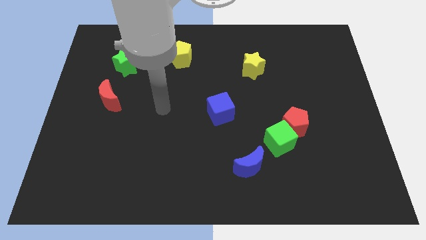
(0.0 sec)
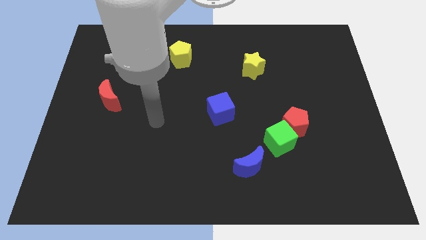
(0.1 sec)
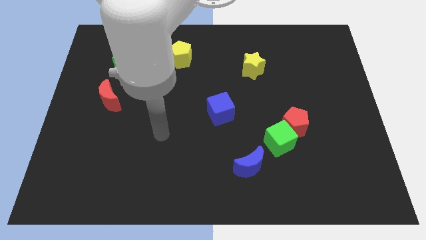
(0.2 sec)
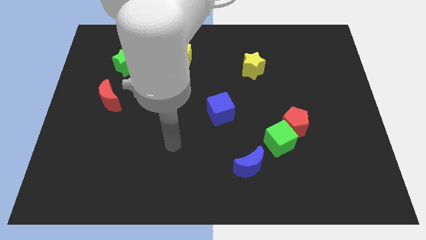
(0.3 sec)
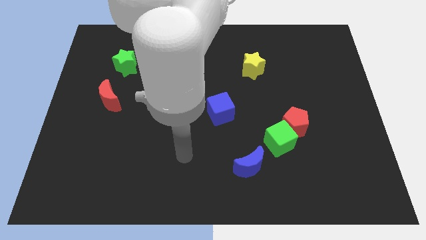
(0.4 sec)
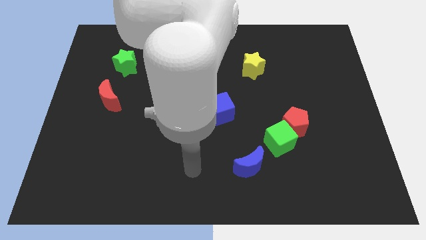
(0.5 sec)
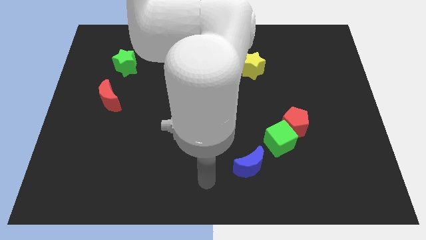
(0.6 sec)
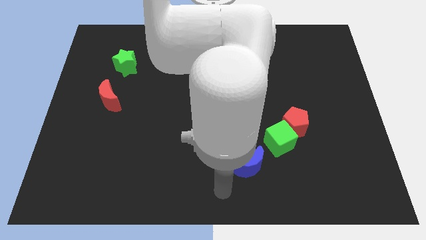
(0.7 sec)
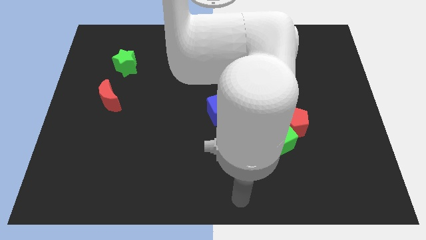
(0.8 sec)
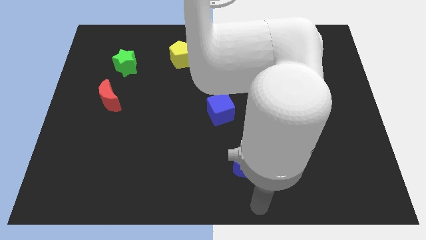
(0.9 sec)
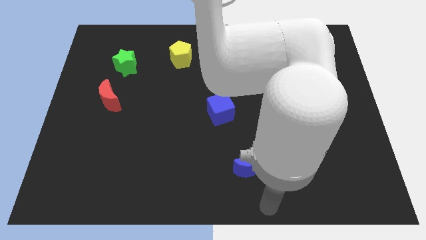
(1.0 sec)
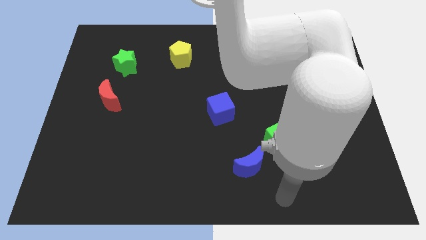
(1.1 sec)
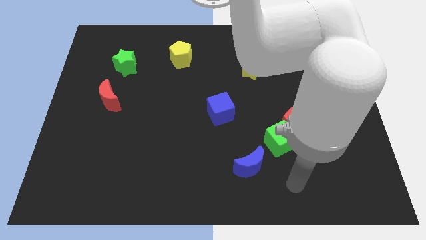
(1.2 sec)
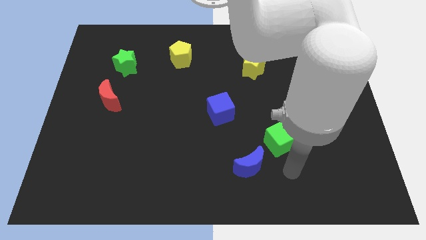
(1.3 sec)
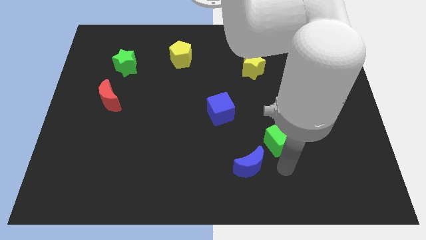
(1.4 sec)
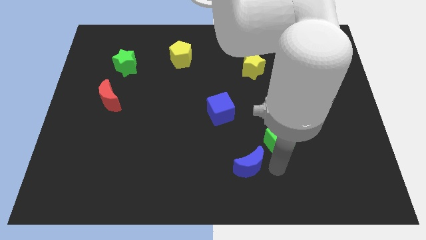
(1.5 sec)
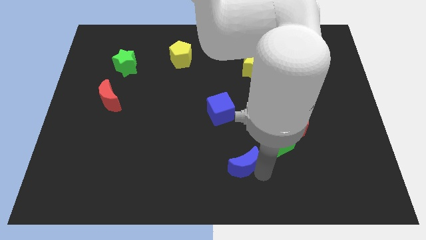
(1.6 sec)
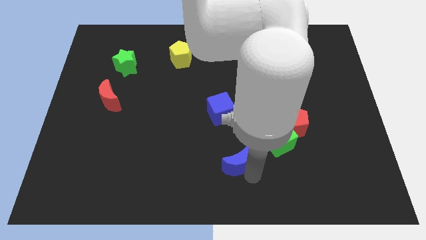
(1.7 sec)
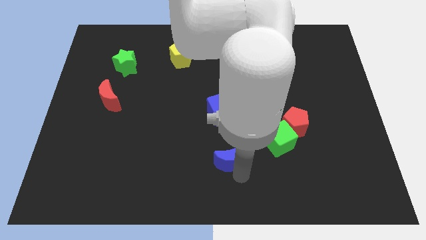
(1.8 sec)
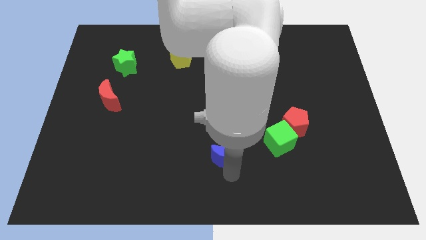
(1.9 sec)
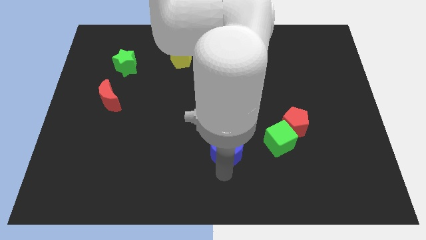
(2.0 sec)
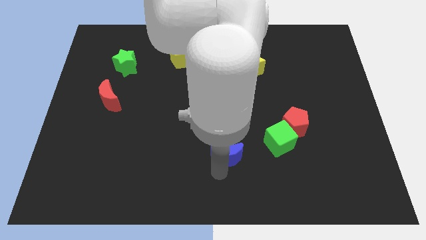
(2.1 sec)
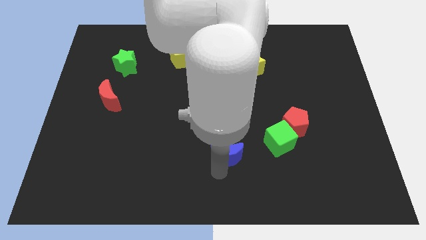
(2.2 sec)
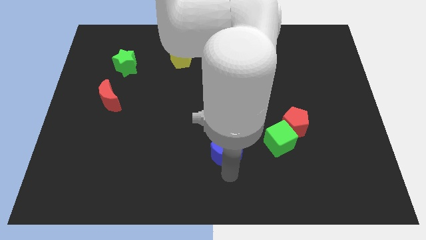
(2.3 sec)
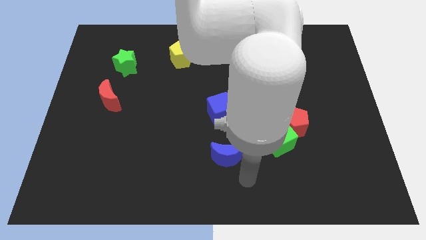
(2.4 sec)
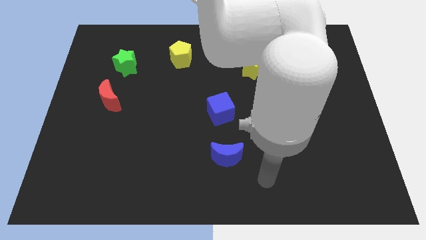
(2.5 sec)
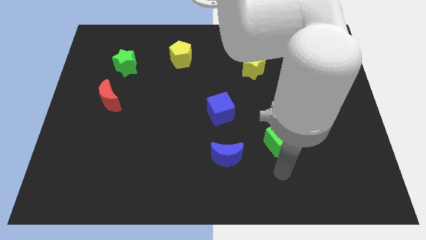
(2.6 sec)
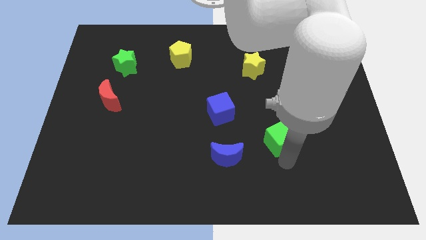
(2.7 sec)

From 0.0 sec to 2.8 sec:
place the blue moon down to the blue cube

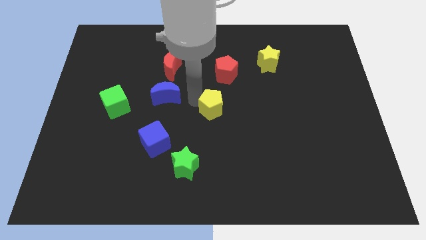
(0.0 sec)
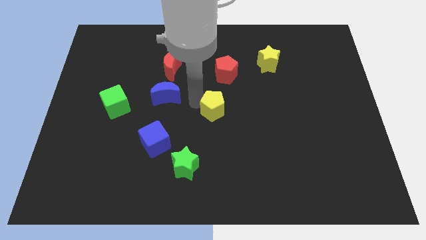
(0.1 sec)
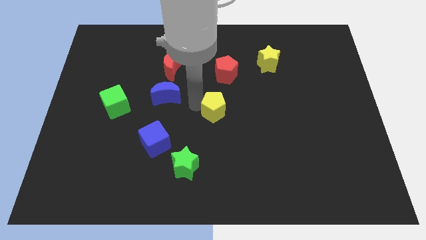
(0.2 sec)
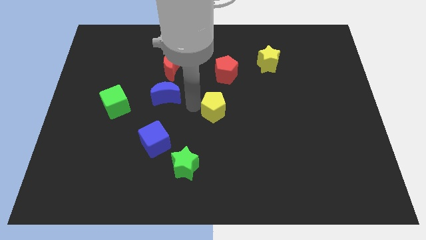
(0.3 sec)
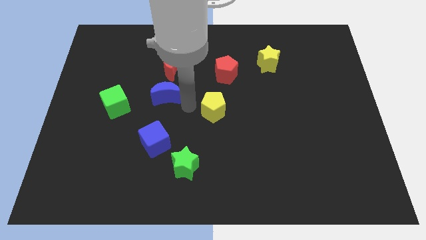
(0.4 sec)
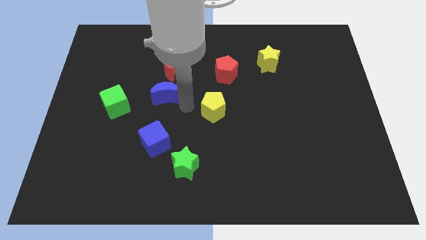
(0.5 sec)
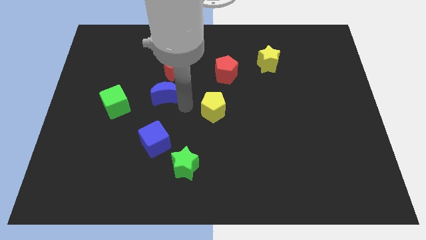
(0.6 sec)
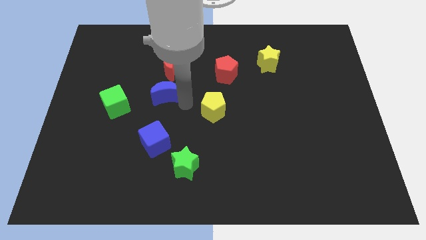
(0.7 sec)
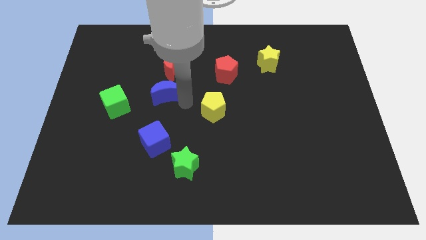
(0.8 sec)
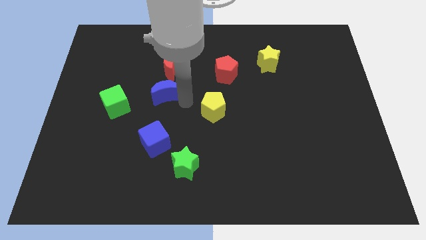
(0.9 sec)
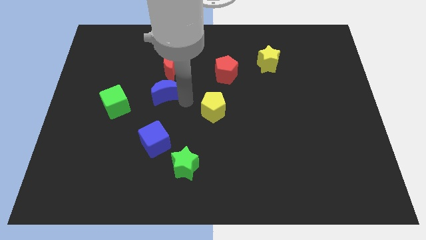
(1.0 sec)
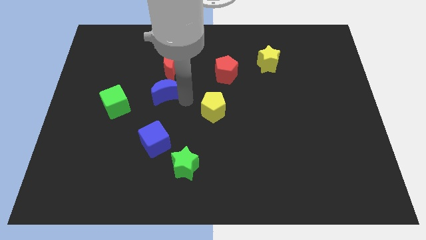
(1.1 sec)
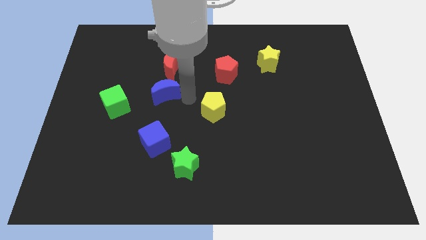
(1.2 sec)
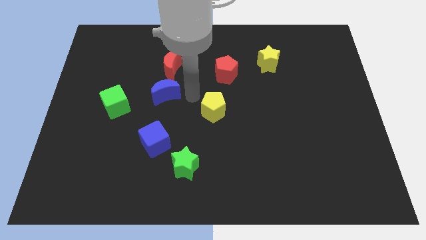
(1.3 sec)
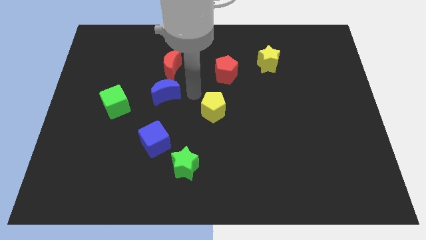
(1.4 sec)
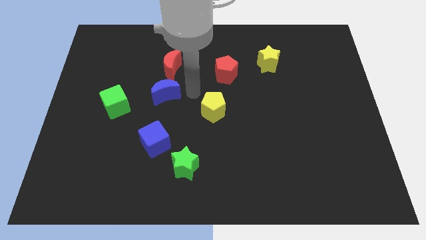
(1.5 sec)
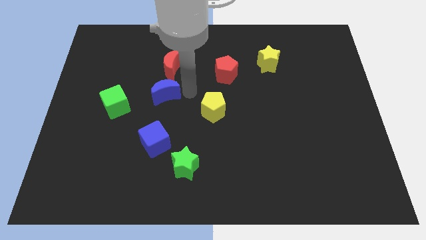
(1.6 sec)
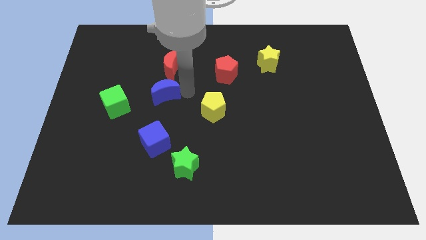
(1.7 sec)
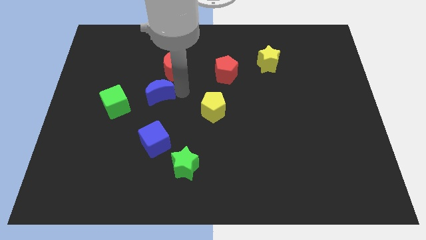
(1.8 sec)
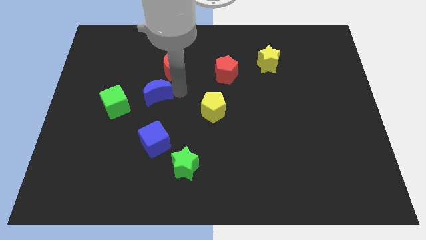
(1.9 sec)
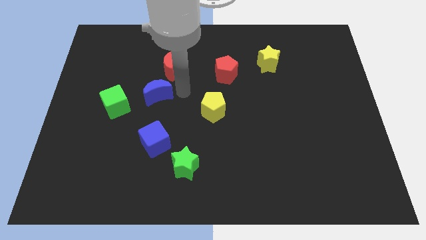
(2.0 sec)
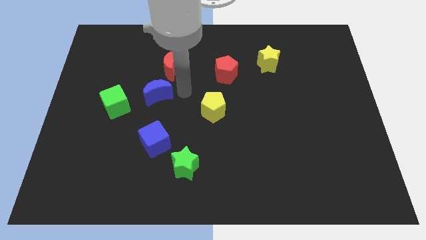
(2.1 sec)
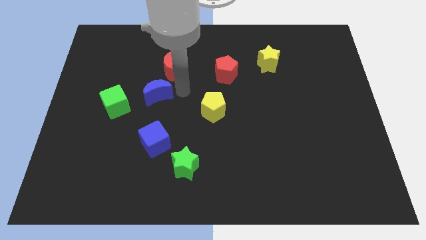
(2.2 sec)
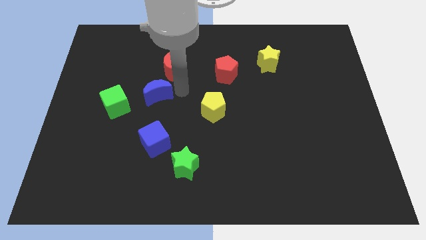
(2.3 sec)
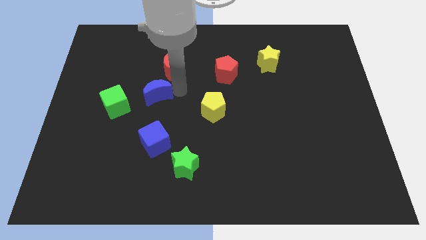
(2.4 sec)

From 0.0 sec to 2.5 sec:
separate blue moon from yellow pentagon

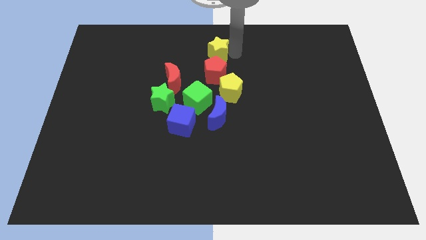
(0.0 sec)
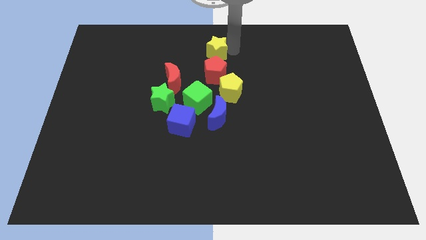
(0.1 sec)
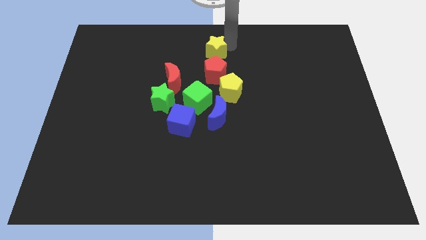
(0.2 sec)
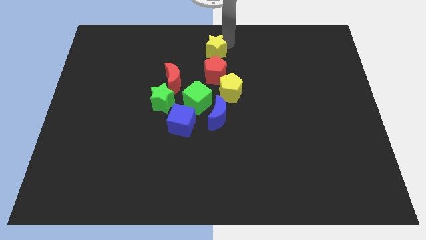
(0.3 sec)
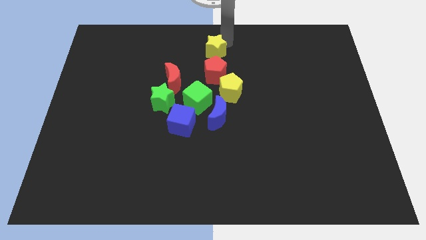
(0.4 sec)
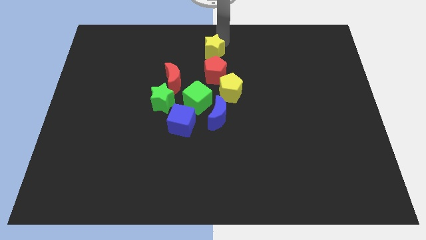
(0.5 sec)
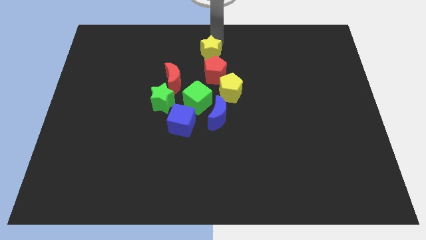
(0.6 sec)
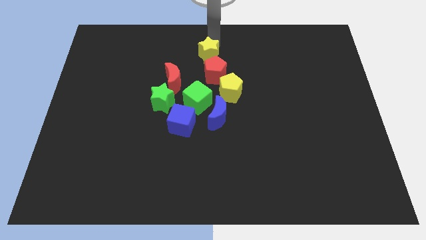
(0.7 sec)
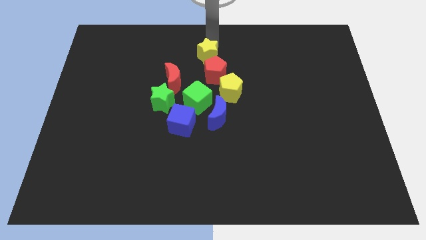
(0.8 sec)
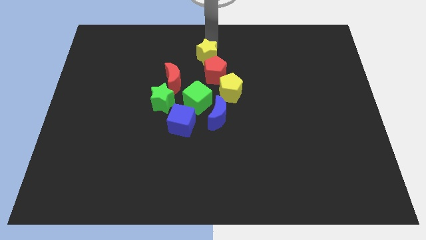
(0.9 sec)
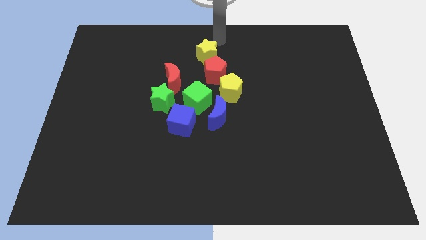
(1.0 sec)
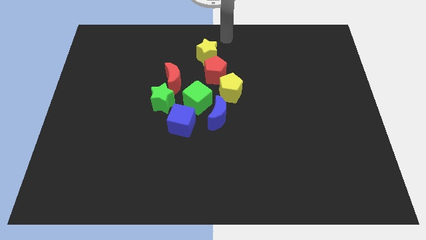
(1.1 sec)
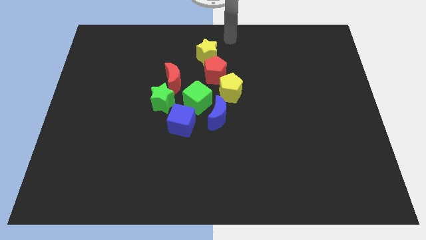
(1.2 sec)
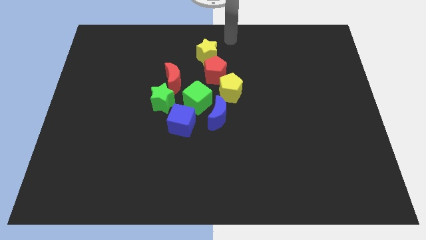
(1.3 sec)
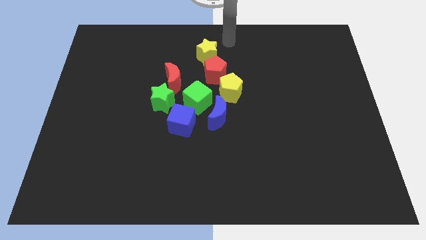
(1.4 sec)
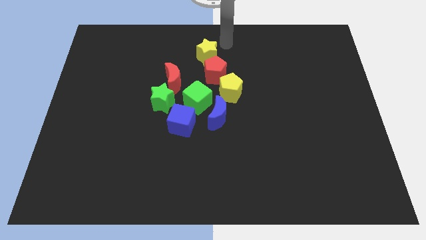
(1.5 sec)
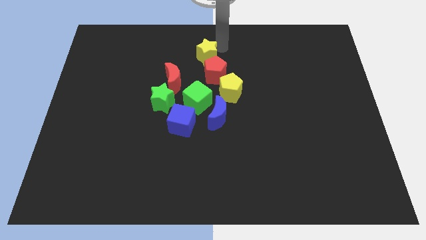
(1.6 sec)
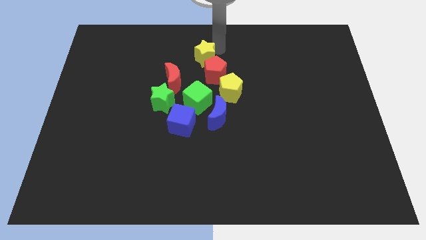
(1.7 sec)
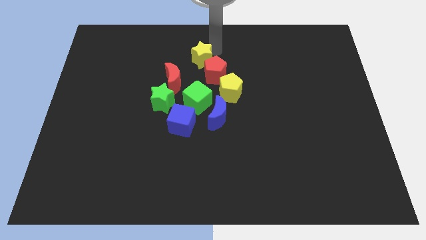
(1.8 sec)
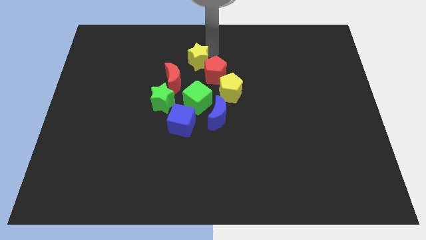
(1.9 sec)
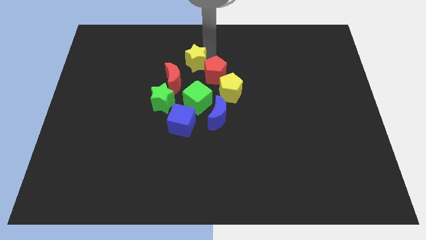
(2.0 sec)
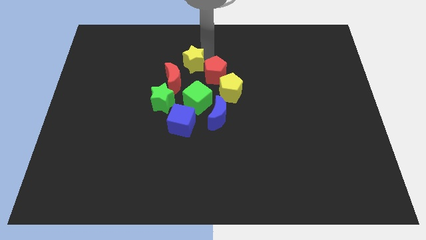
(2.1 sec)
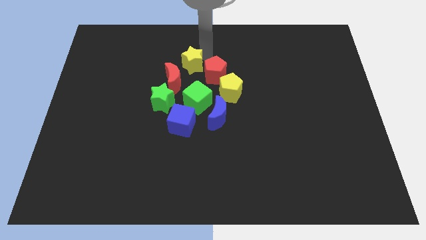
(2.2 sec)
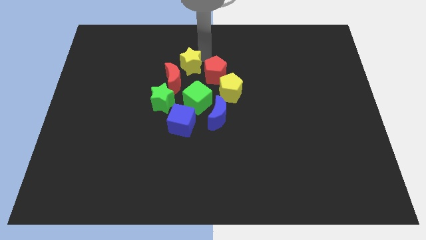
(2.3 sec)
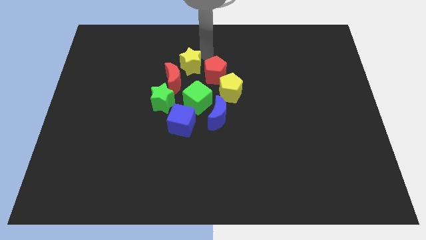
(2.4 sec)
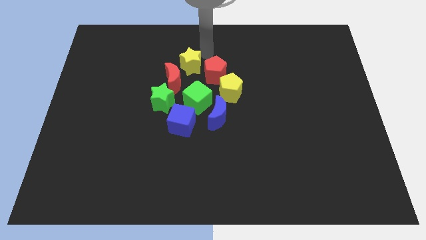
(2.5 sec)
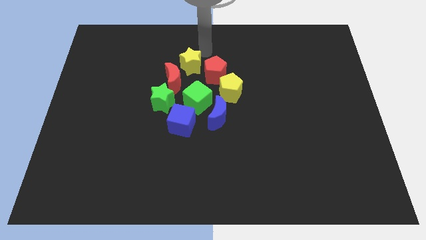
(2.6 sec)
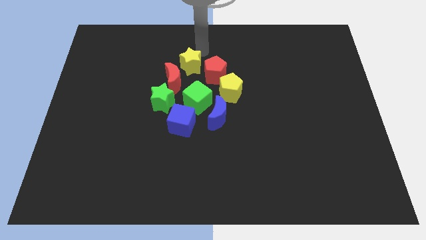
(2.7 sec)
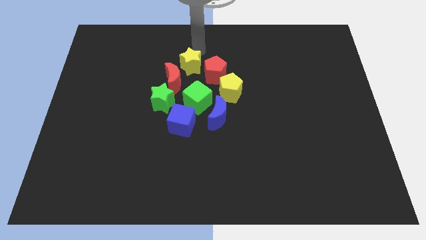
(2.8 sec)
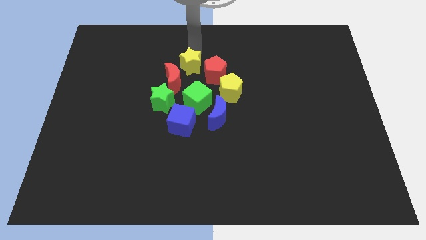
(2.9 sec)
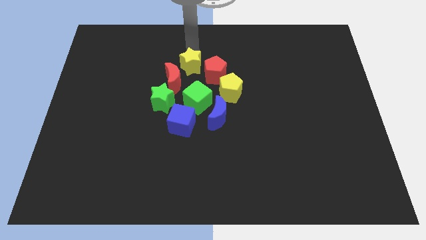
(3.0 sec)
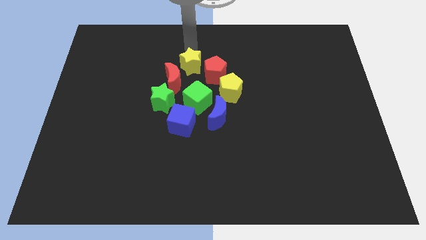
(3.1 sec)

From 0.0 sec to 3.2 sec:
move the yellow star to the top left of the red pentagon

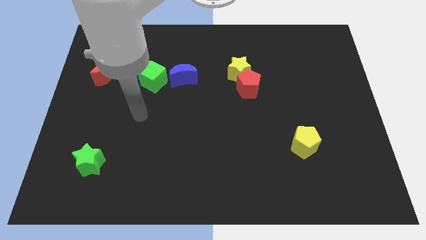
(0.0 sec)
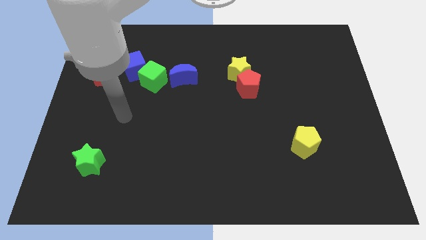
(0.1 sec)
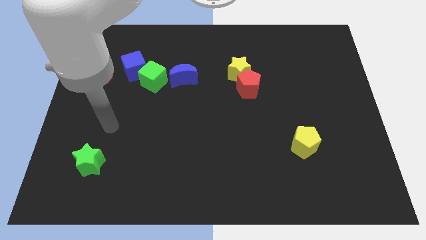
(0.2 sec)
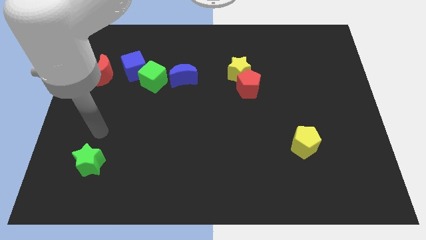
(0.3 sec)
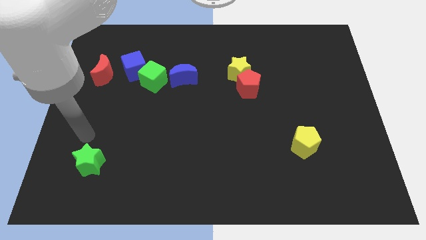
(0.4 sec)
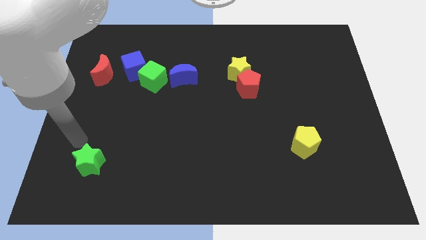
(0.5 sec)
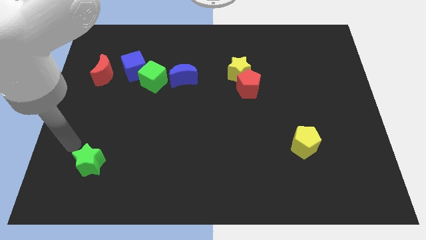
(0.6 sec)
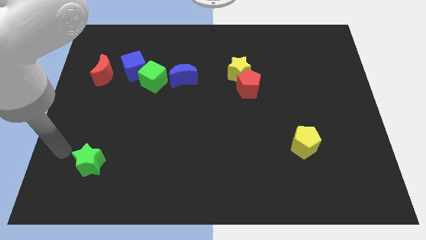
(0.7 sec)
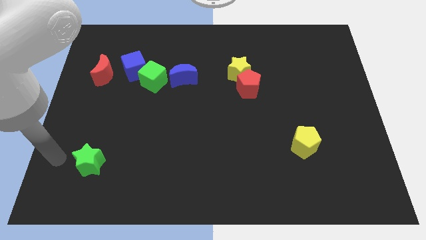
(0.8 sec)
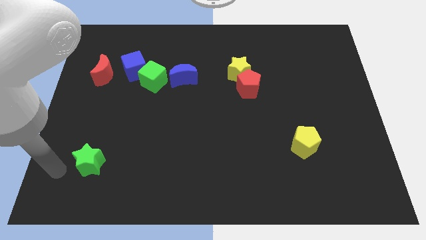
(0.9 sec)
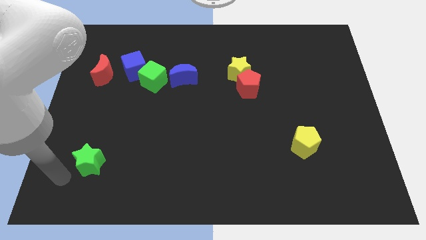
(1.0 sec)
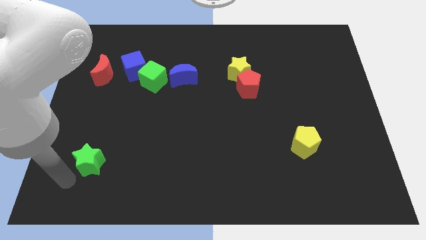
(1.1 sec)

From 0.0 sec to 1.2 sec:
place your hand at the left side of the green star
